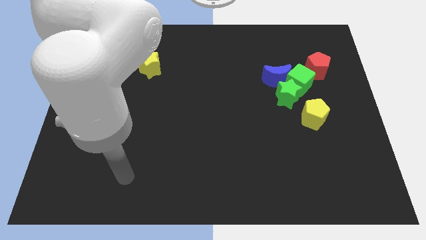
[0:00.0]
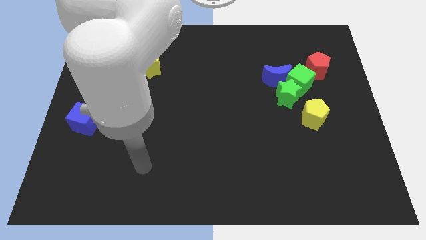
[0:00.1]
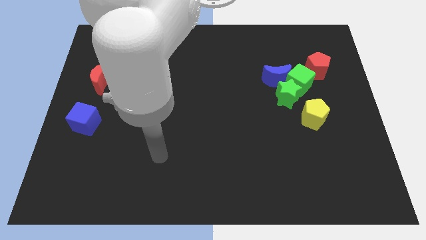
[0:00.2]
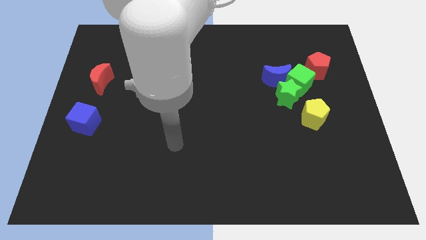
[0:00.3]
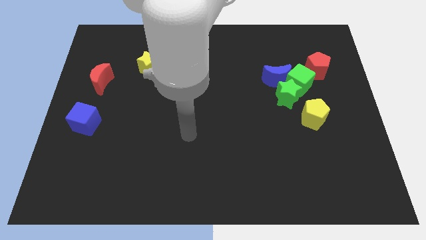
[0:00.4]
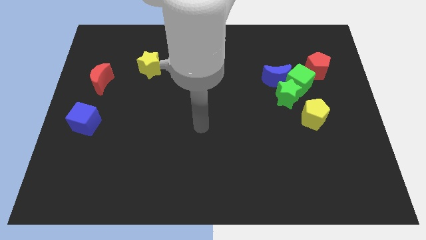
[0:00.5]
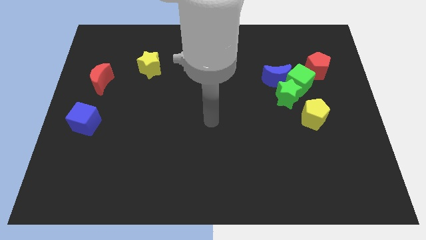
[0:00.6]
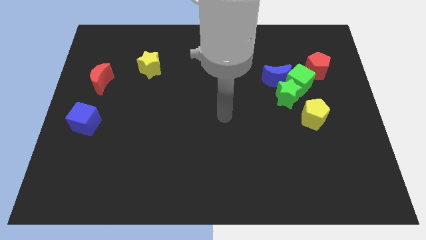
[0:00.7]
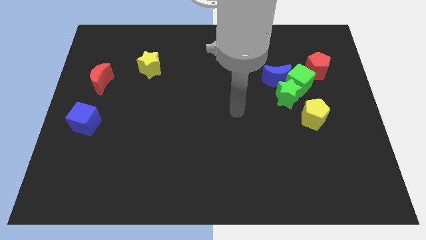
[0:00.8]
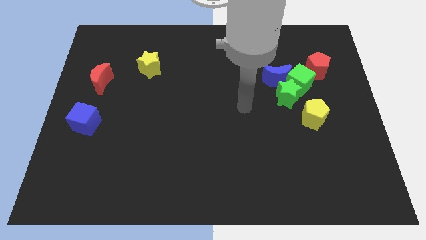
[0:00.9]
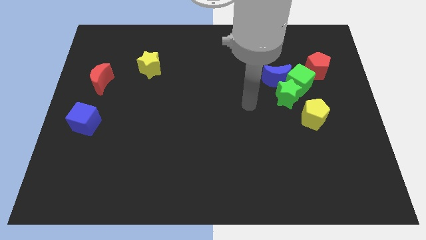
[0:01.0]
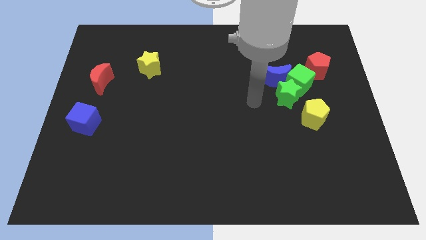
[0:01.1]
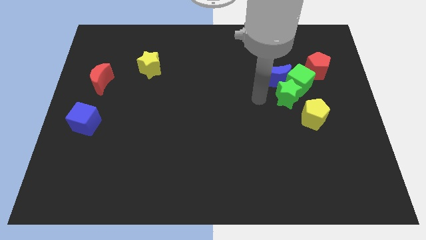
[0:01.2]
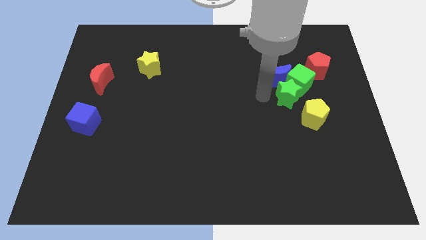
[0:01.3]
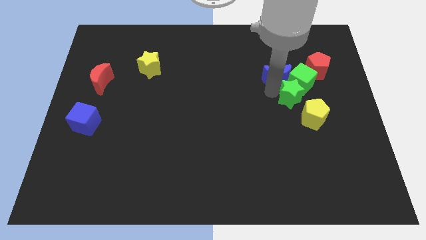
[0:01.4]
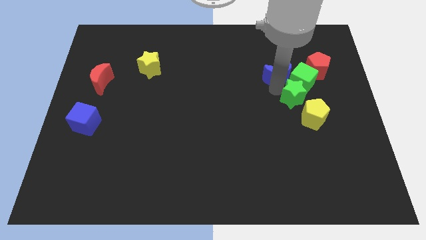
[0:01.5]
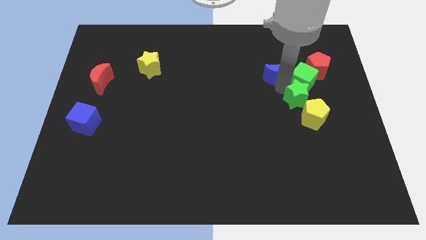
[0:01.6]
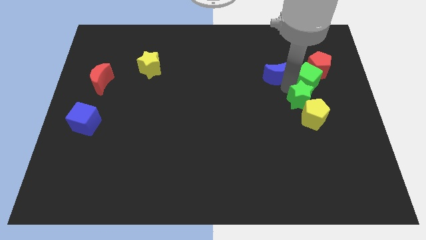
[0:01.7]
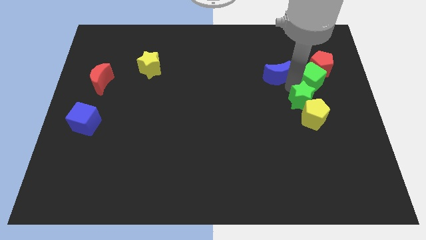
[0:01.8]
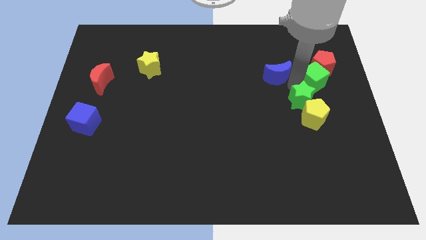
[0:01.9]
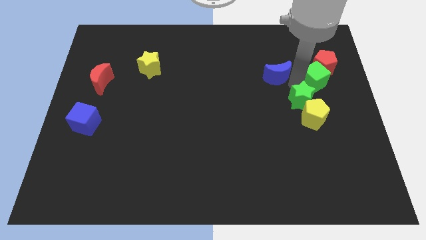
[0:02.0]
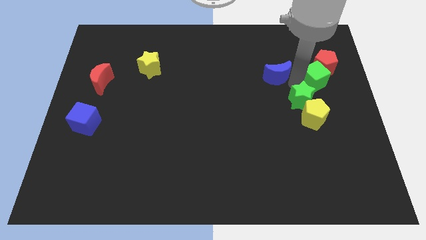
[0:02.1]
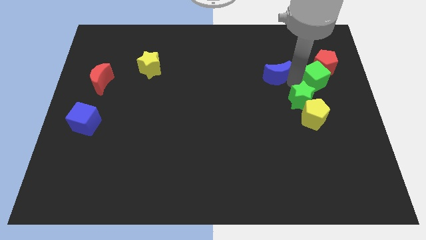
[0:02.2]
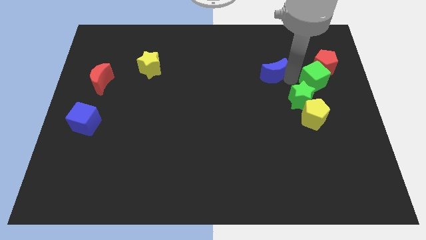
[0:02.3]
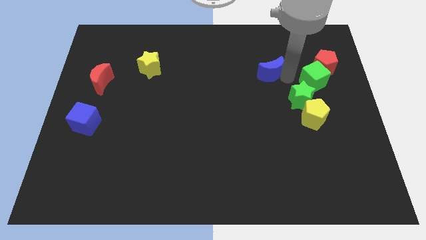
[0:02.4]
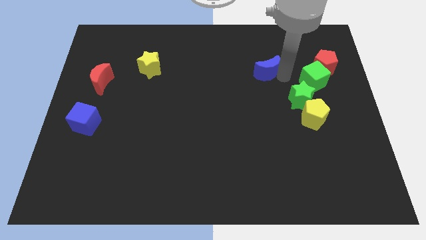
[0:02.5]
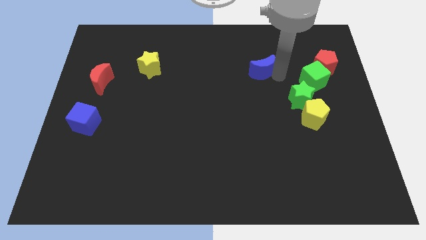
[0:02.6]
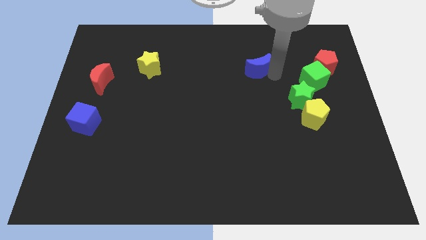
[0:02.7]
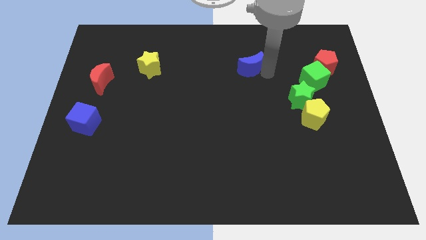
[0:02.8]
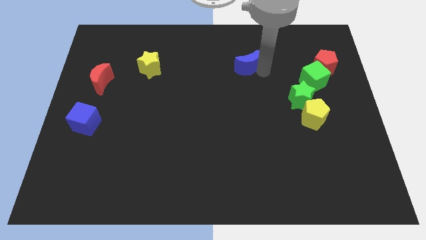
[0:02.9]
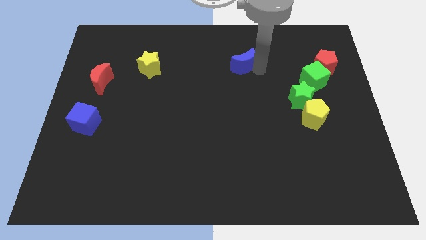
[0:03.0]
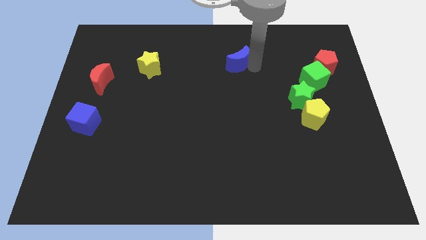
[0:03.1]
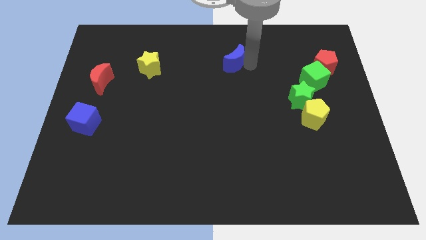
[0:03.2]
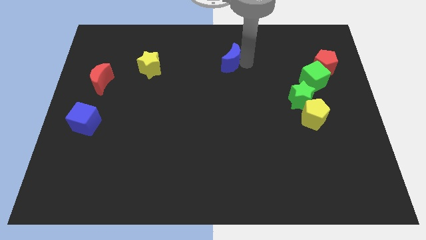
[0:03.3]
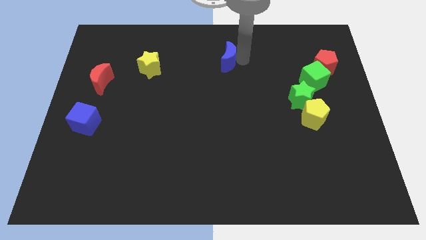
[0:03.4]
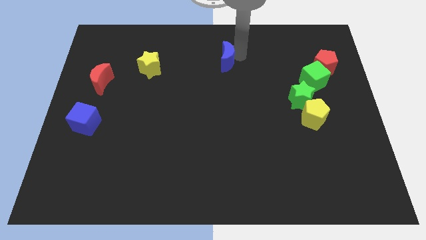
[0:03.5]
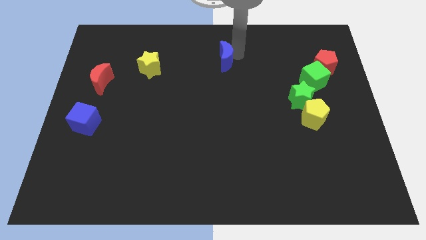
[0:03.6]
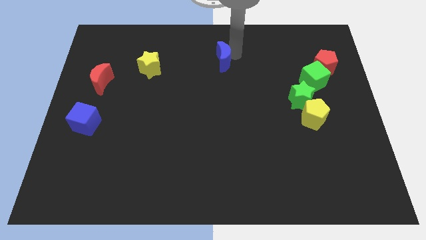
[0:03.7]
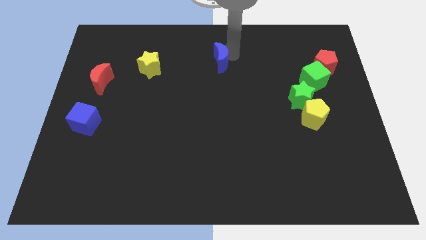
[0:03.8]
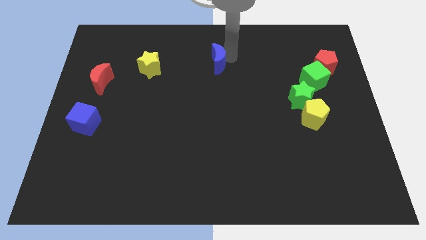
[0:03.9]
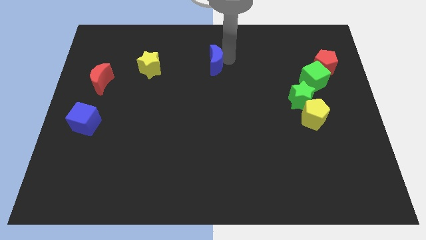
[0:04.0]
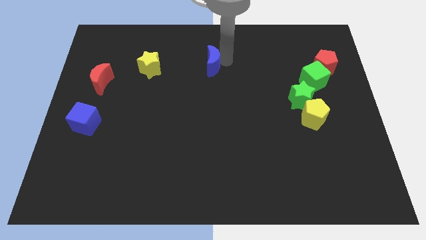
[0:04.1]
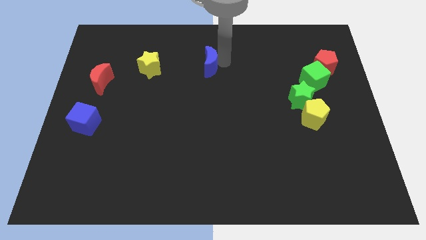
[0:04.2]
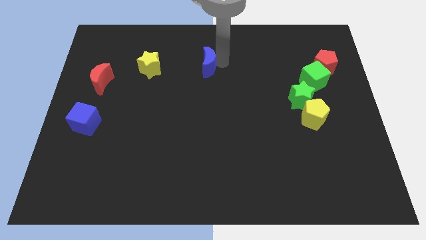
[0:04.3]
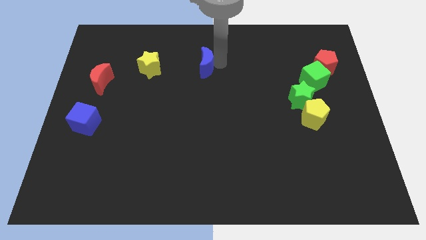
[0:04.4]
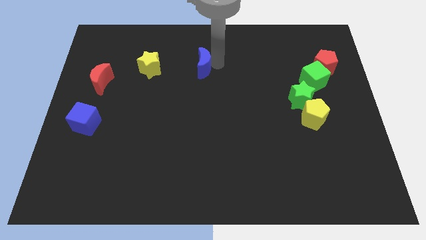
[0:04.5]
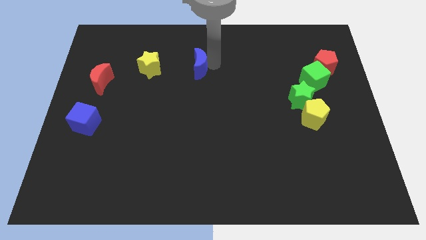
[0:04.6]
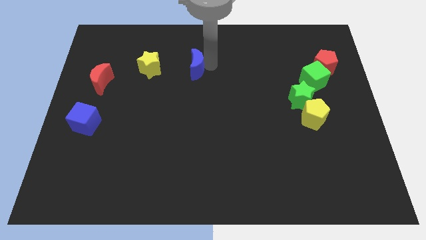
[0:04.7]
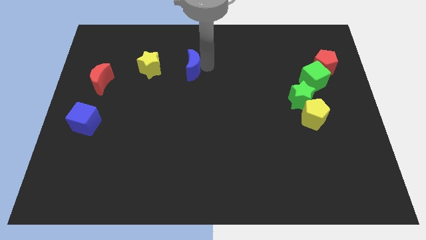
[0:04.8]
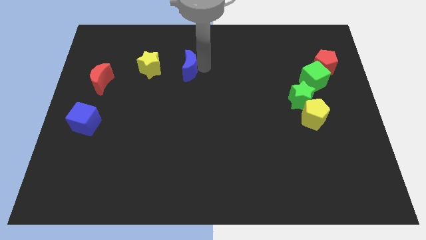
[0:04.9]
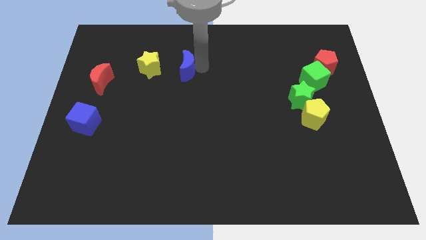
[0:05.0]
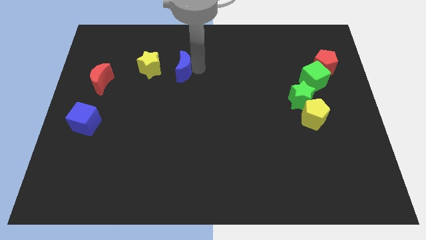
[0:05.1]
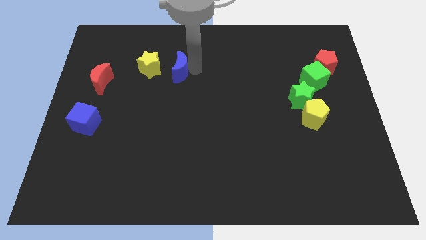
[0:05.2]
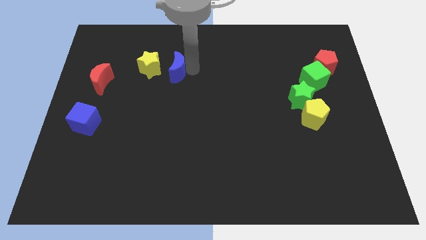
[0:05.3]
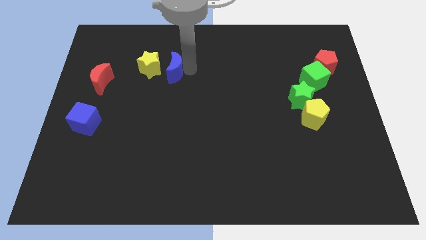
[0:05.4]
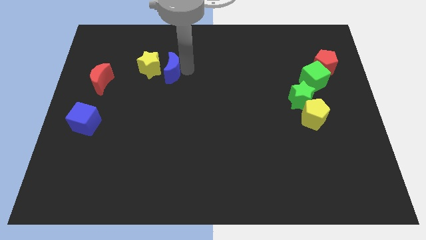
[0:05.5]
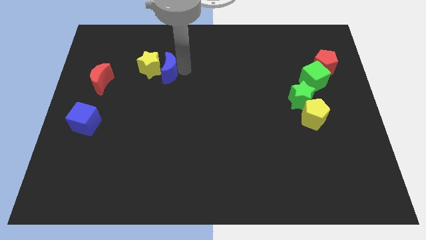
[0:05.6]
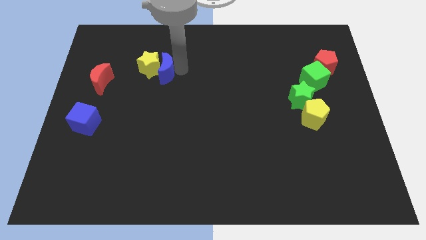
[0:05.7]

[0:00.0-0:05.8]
move the blue moon to the yellow star

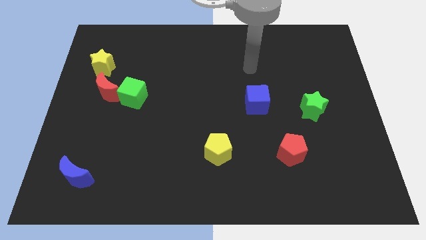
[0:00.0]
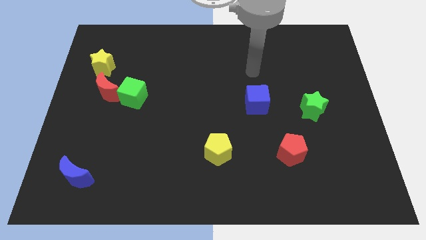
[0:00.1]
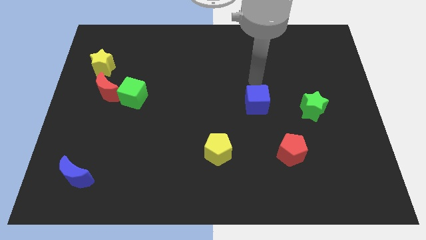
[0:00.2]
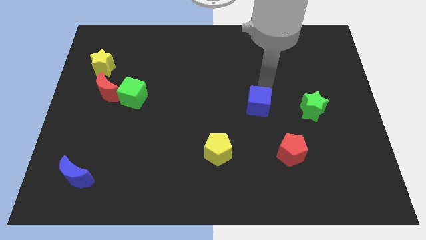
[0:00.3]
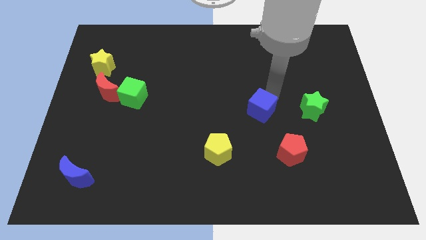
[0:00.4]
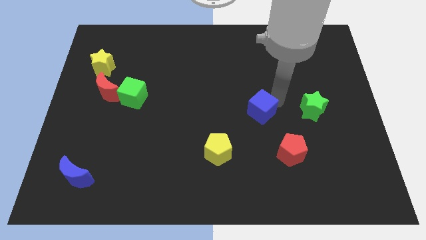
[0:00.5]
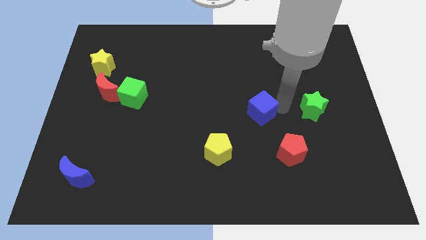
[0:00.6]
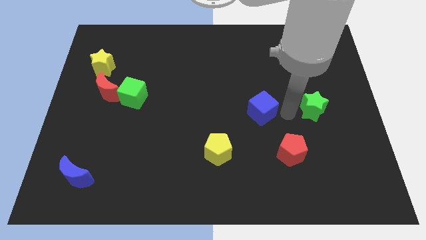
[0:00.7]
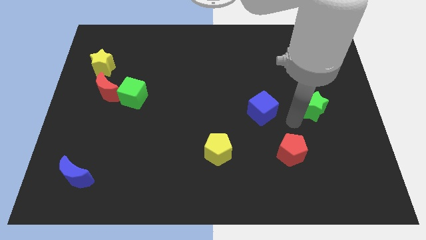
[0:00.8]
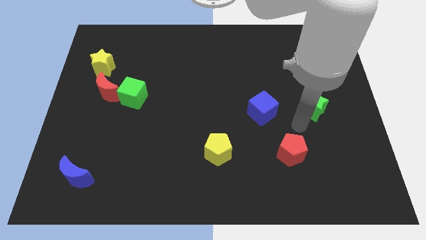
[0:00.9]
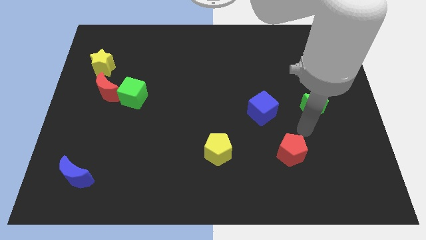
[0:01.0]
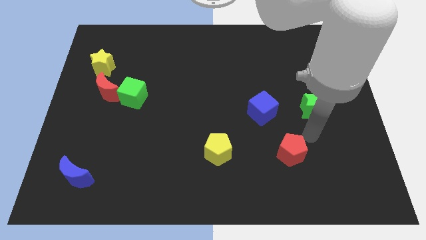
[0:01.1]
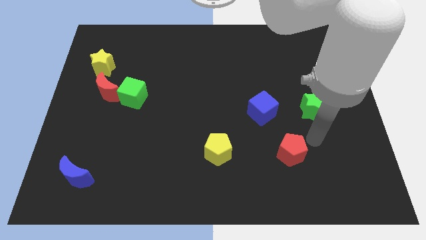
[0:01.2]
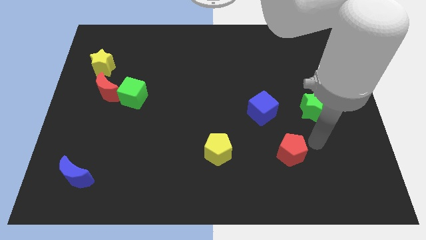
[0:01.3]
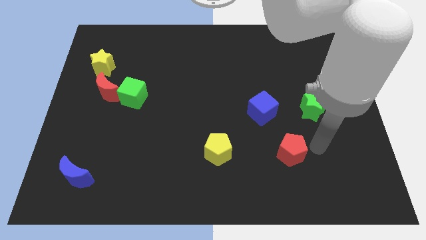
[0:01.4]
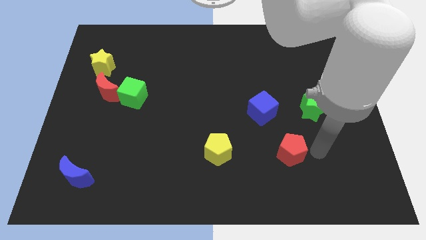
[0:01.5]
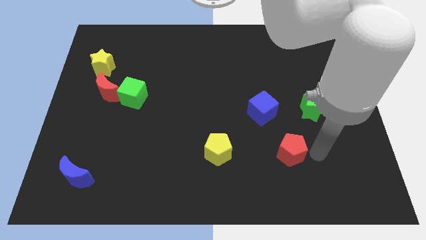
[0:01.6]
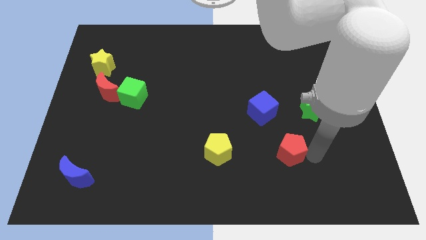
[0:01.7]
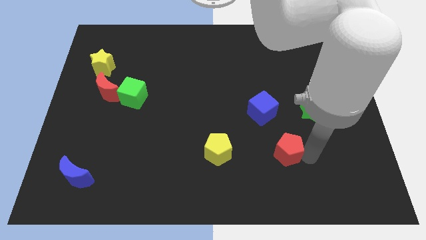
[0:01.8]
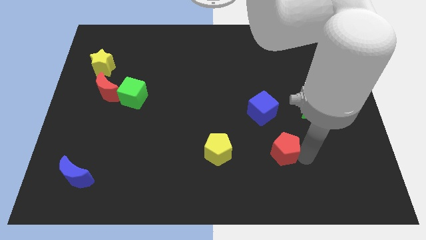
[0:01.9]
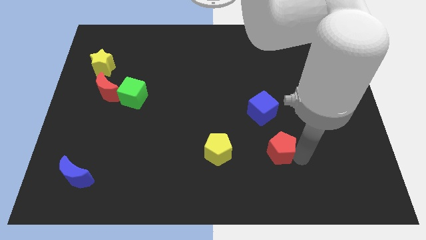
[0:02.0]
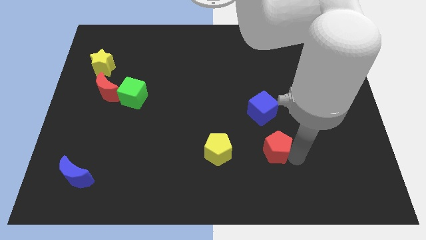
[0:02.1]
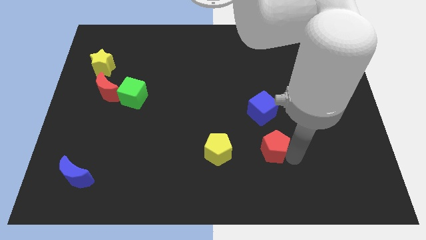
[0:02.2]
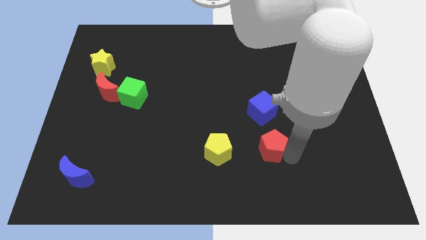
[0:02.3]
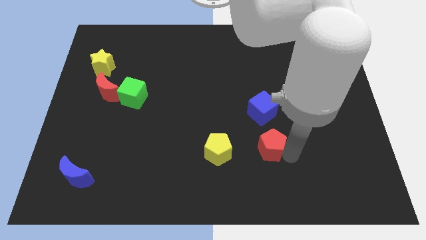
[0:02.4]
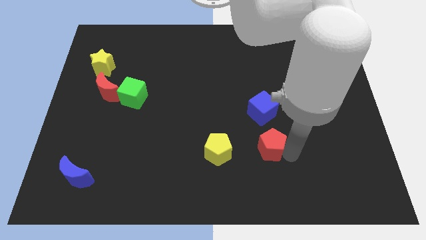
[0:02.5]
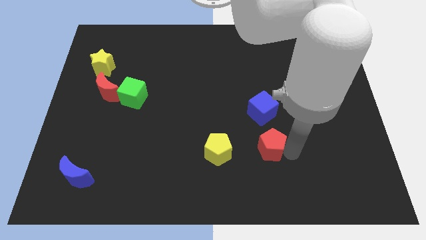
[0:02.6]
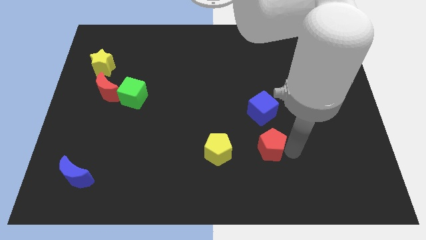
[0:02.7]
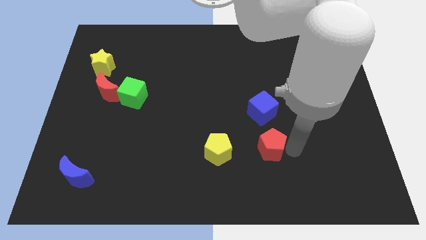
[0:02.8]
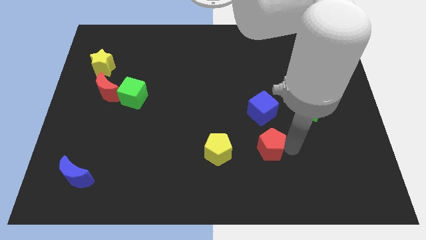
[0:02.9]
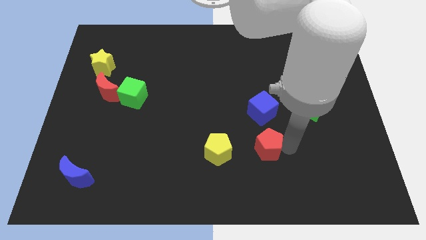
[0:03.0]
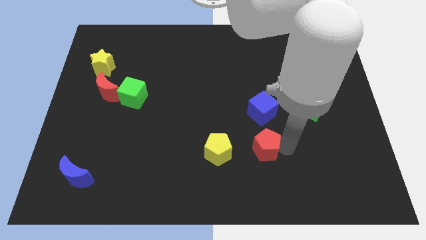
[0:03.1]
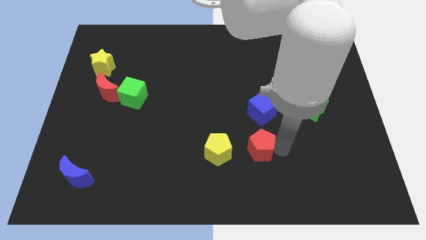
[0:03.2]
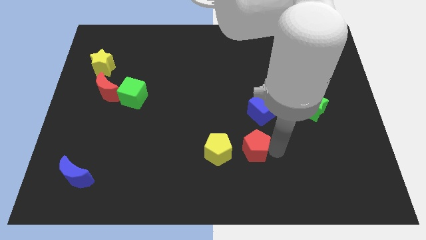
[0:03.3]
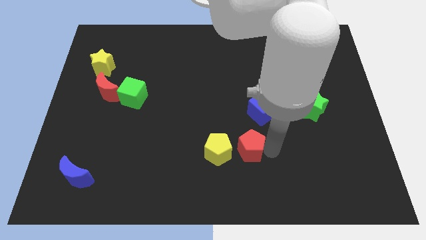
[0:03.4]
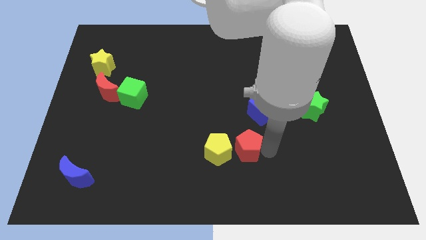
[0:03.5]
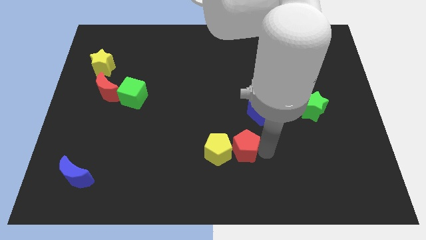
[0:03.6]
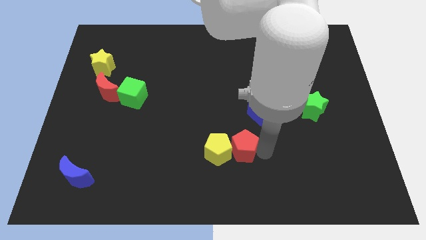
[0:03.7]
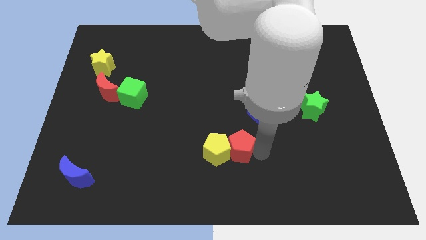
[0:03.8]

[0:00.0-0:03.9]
put the red pentagon close to the yellow pentagon
